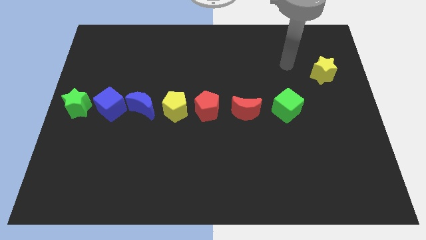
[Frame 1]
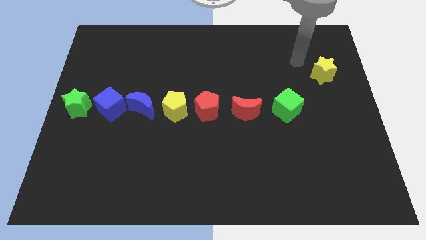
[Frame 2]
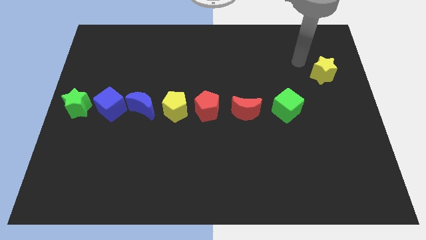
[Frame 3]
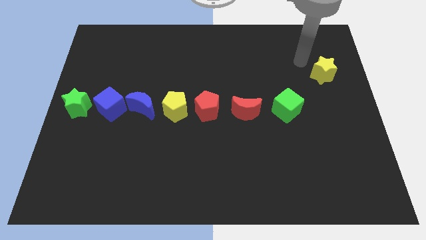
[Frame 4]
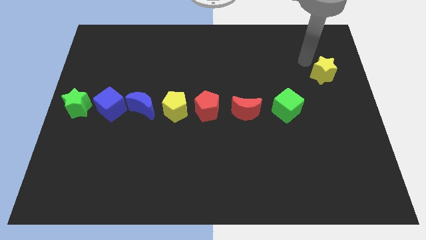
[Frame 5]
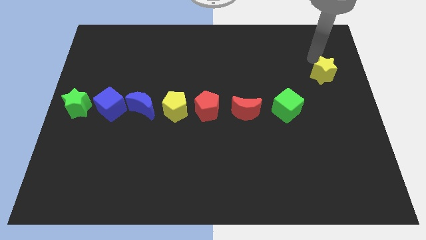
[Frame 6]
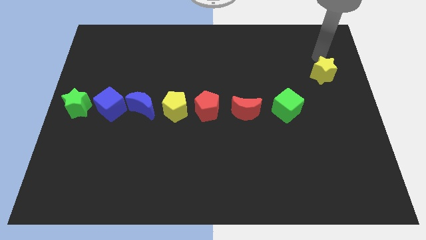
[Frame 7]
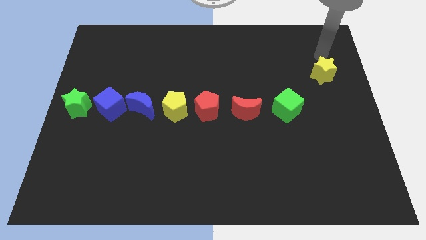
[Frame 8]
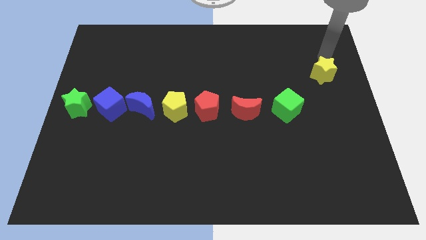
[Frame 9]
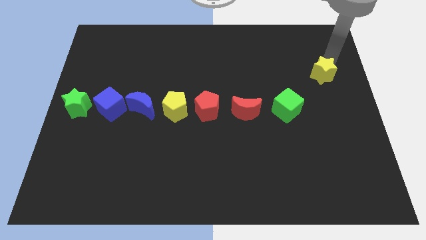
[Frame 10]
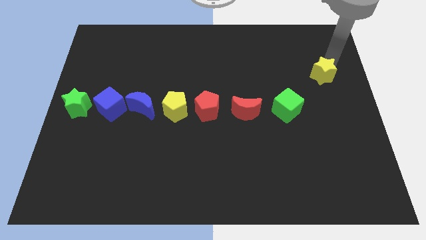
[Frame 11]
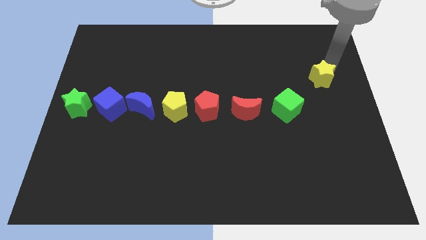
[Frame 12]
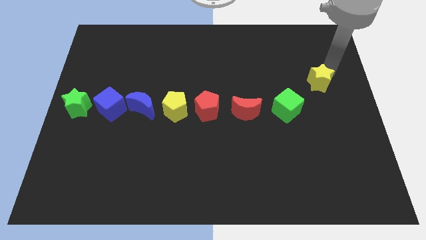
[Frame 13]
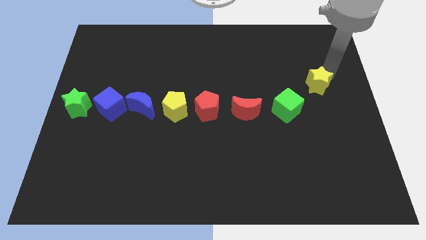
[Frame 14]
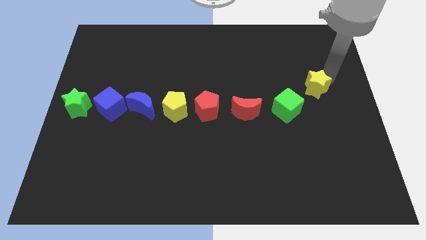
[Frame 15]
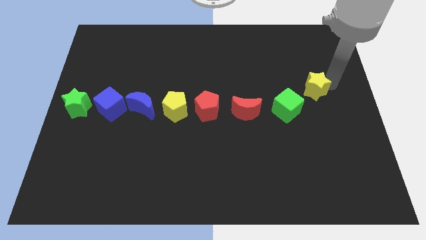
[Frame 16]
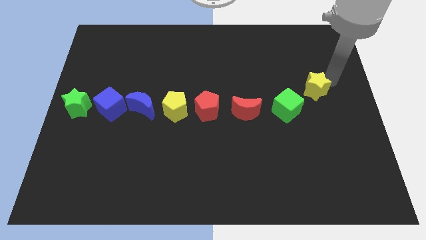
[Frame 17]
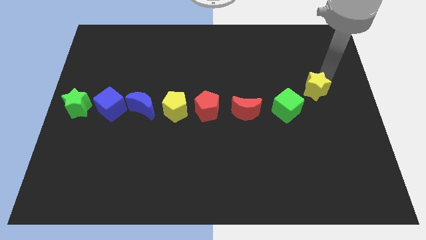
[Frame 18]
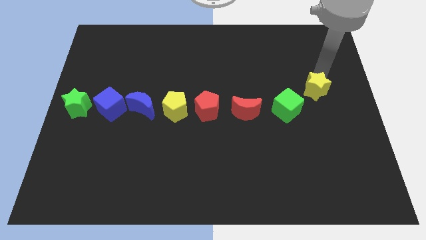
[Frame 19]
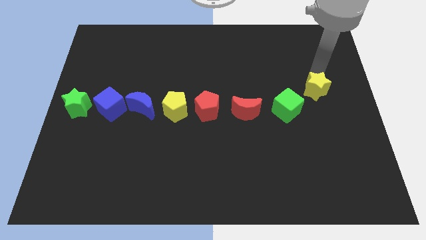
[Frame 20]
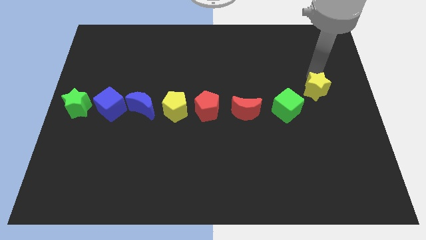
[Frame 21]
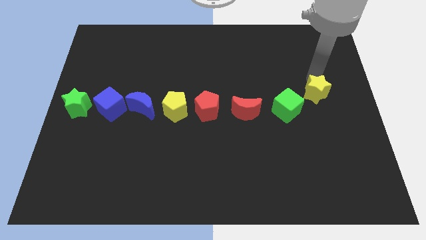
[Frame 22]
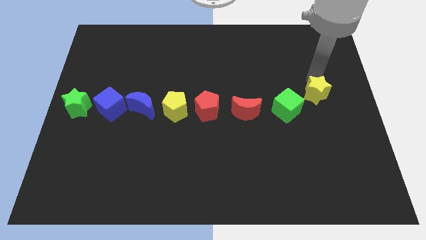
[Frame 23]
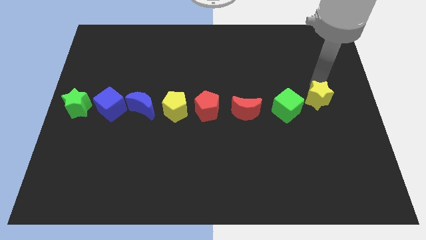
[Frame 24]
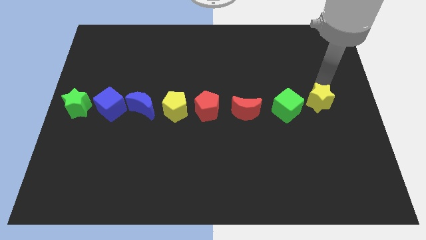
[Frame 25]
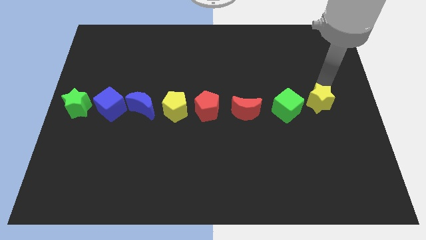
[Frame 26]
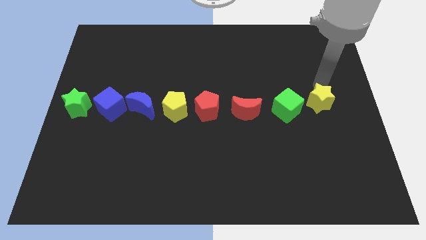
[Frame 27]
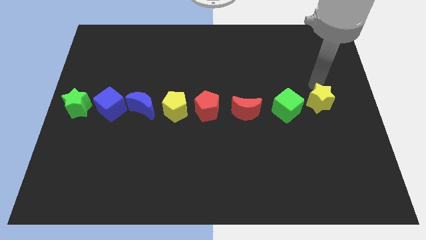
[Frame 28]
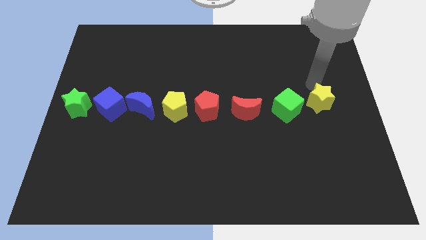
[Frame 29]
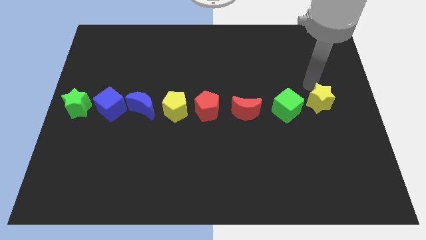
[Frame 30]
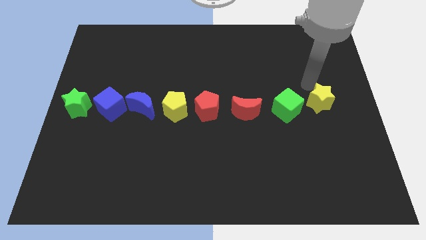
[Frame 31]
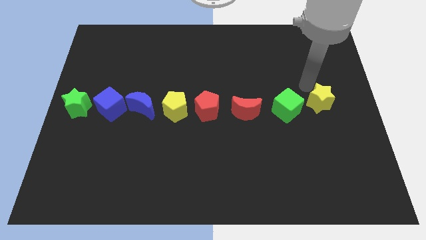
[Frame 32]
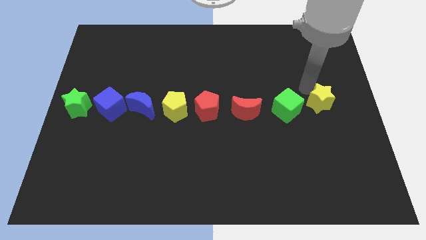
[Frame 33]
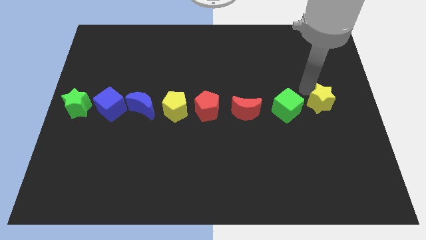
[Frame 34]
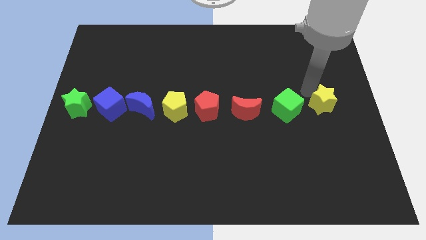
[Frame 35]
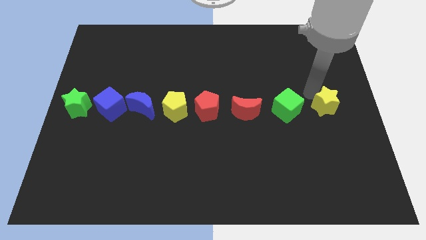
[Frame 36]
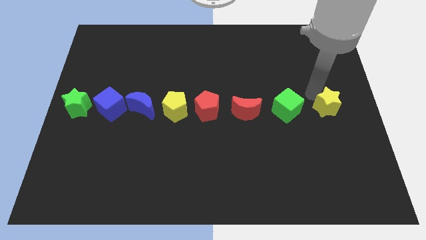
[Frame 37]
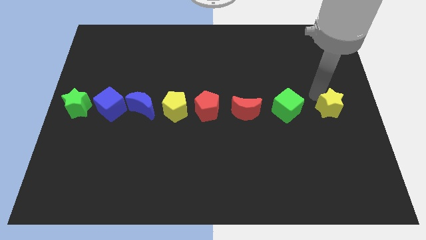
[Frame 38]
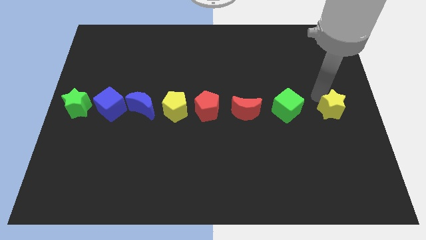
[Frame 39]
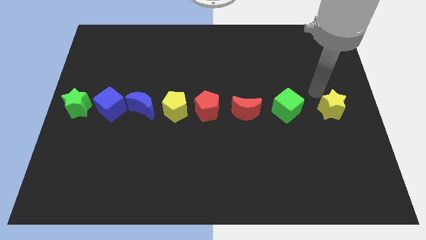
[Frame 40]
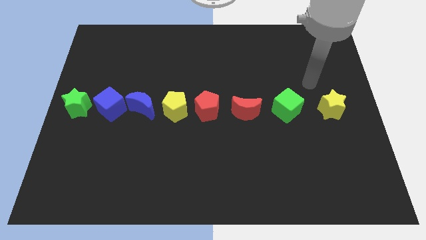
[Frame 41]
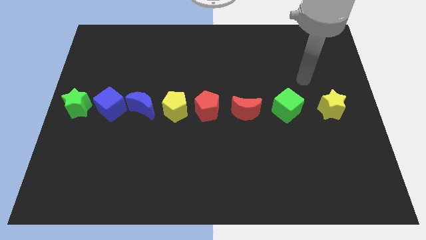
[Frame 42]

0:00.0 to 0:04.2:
place the yellow star right to the green cube

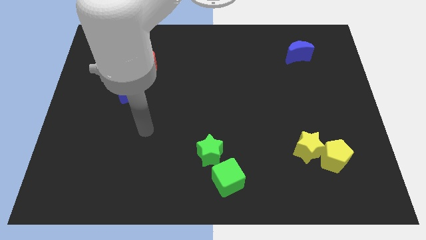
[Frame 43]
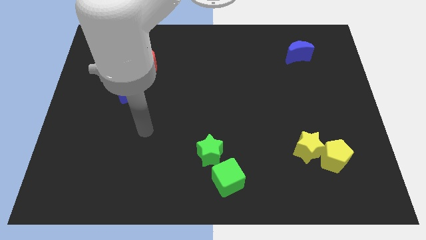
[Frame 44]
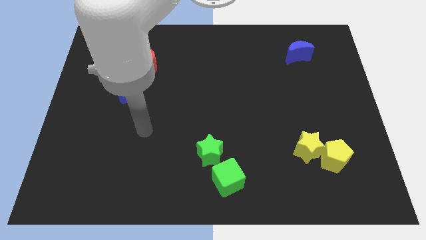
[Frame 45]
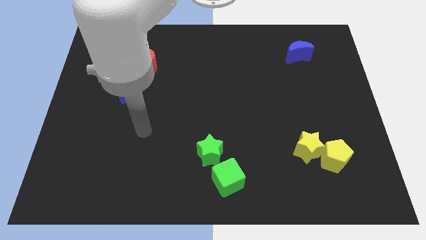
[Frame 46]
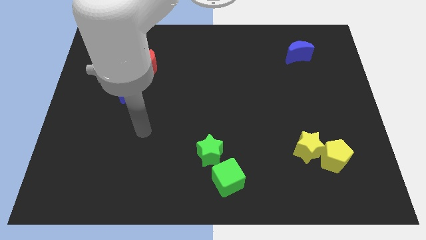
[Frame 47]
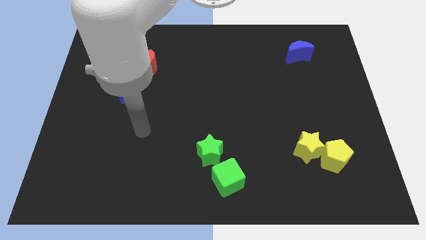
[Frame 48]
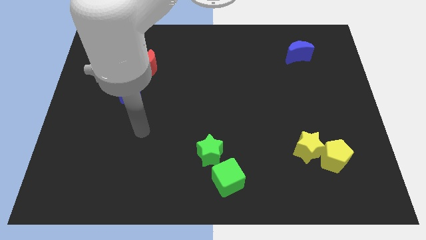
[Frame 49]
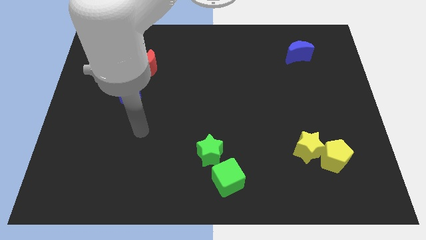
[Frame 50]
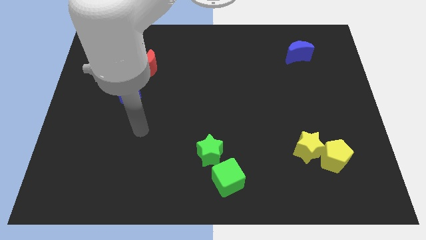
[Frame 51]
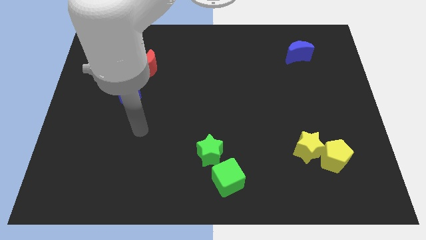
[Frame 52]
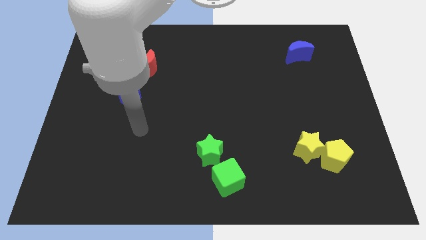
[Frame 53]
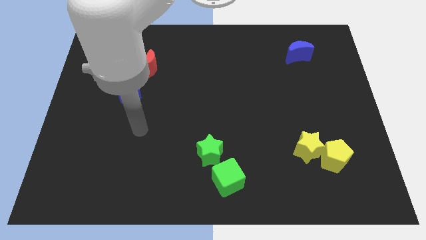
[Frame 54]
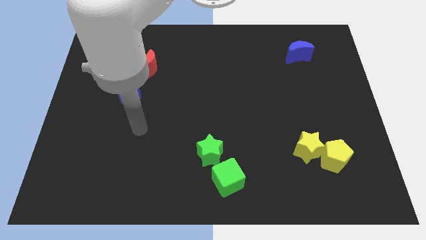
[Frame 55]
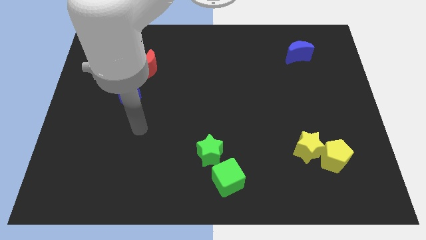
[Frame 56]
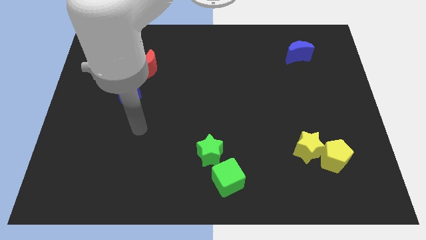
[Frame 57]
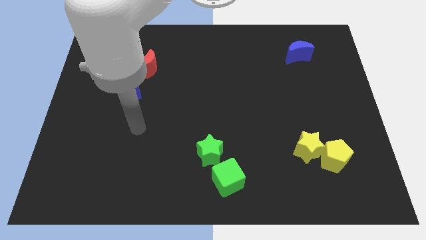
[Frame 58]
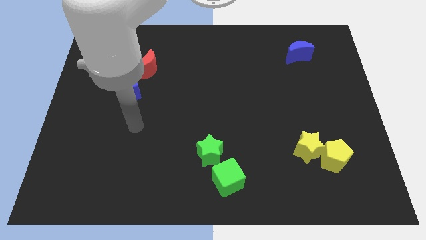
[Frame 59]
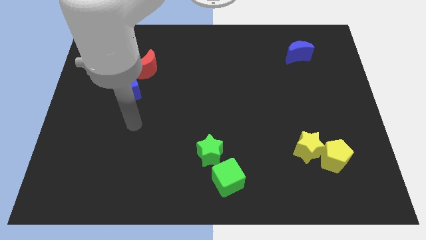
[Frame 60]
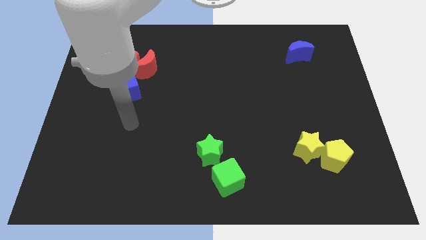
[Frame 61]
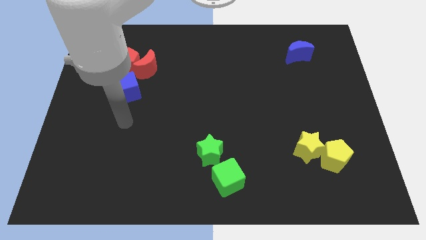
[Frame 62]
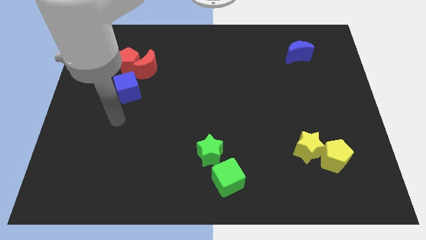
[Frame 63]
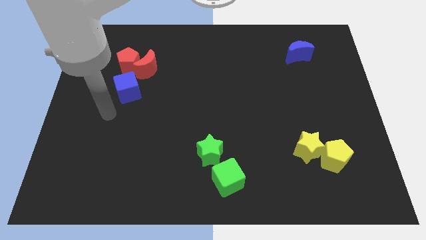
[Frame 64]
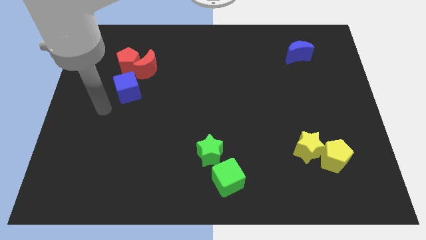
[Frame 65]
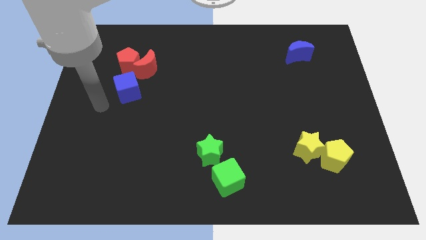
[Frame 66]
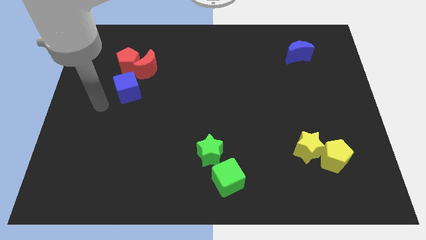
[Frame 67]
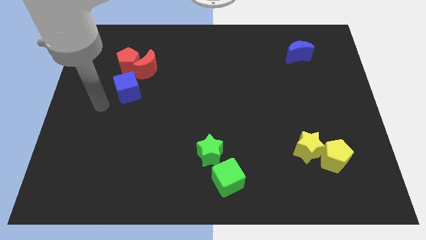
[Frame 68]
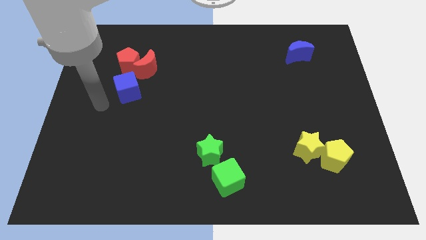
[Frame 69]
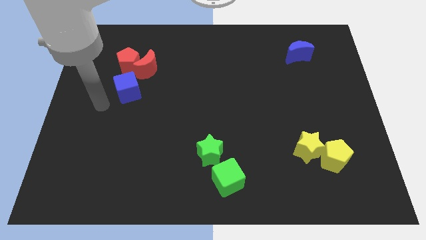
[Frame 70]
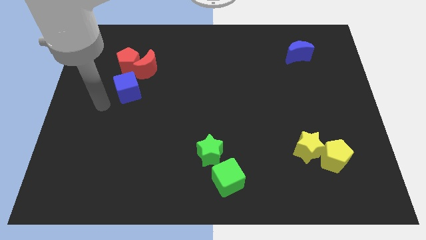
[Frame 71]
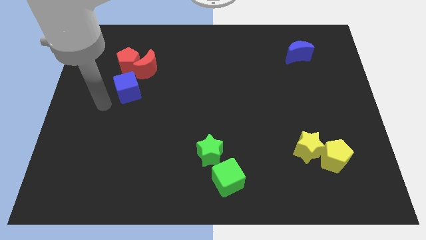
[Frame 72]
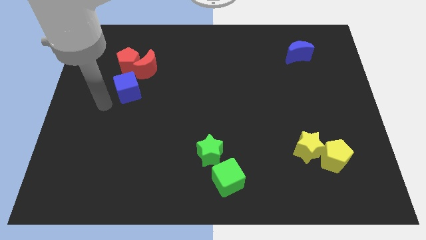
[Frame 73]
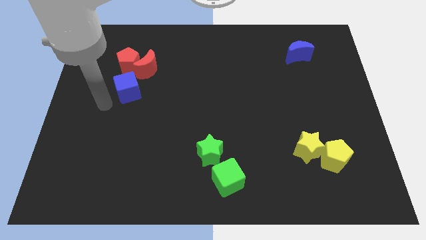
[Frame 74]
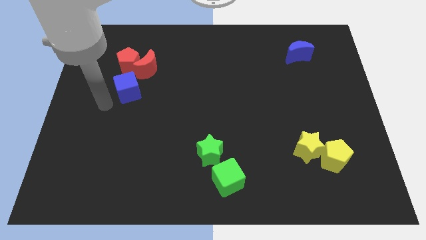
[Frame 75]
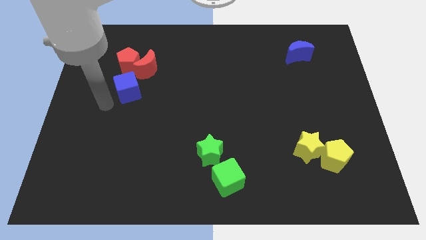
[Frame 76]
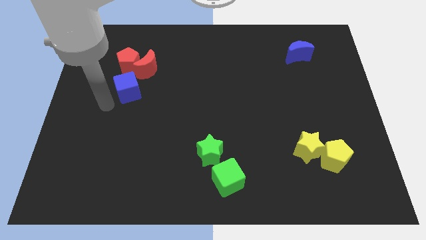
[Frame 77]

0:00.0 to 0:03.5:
move your arm towards the left of the blue cube

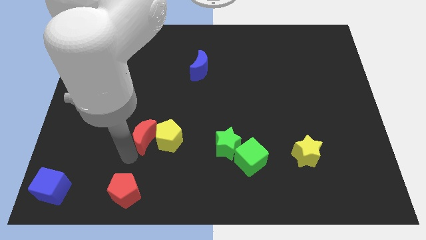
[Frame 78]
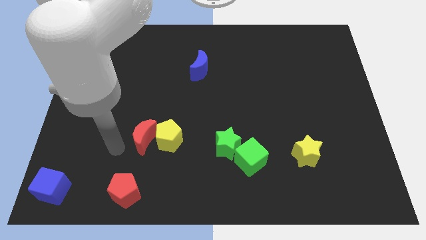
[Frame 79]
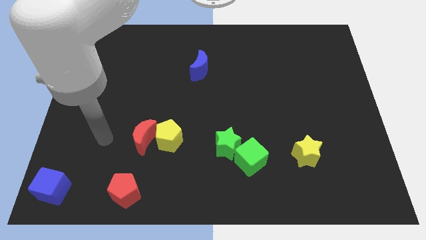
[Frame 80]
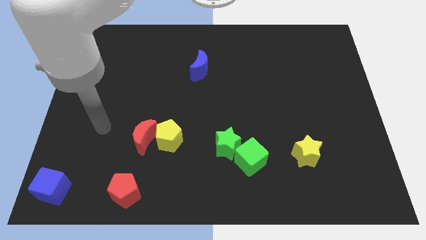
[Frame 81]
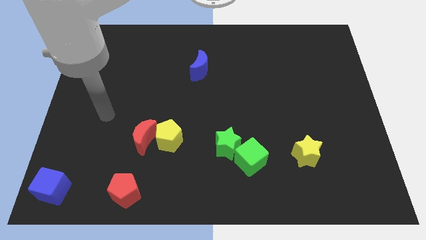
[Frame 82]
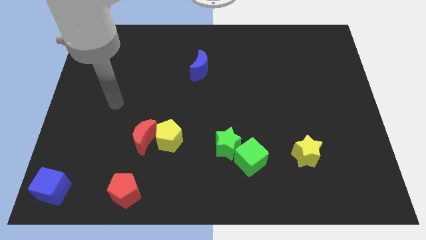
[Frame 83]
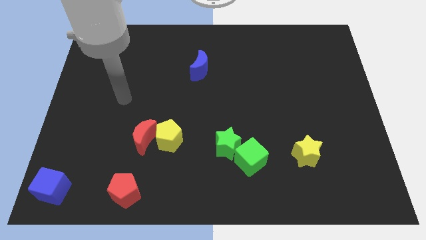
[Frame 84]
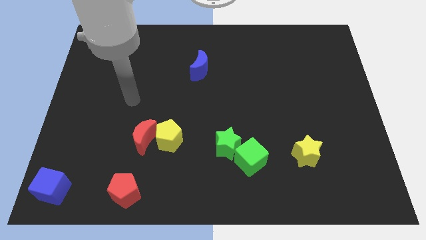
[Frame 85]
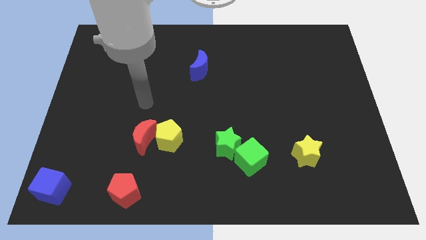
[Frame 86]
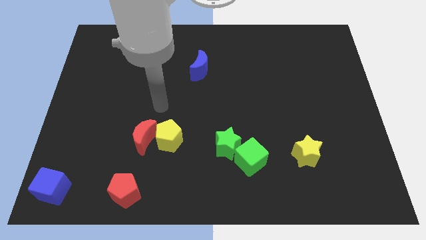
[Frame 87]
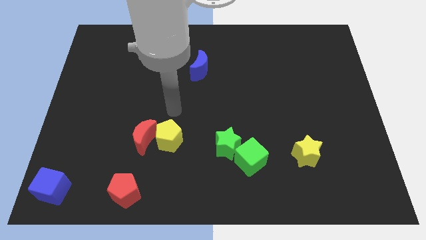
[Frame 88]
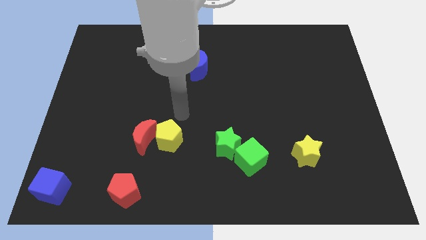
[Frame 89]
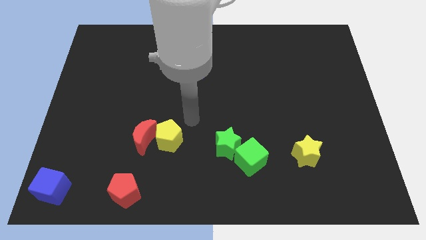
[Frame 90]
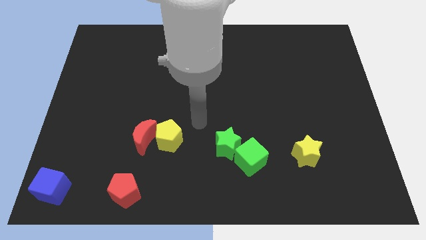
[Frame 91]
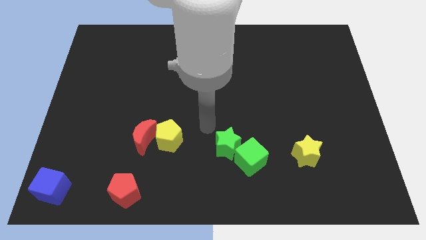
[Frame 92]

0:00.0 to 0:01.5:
move arm away from the red crescent
